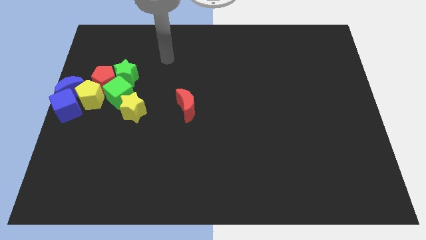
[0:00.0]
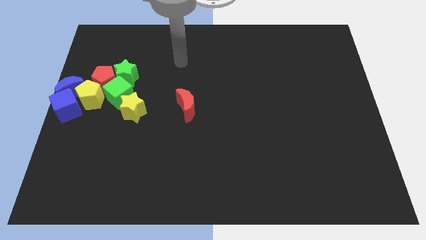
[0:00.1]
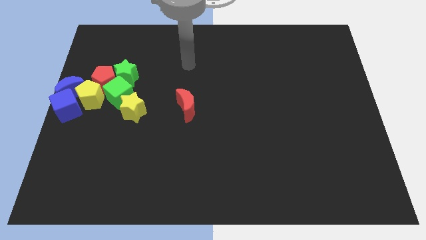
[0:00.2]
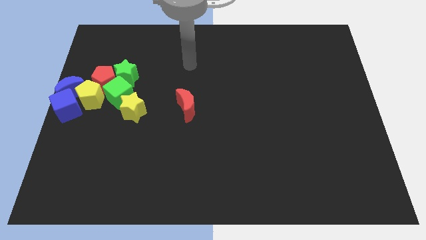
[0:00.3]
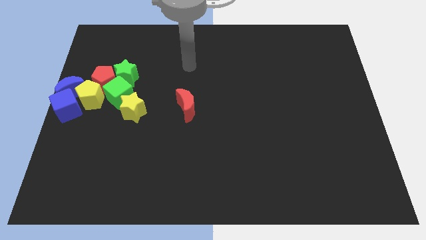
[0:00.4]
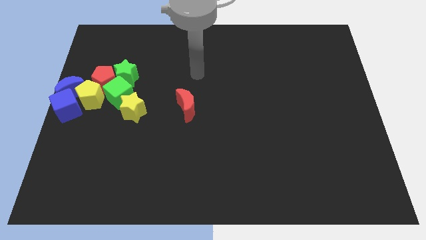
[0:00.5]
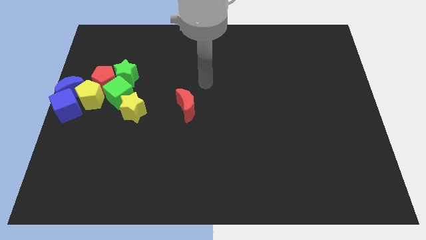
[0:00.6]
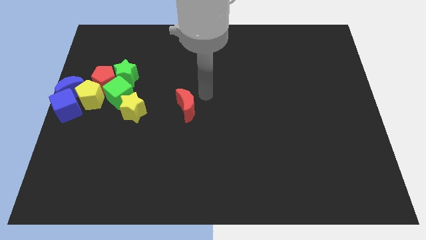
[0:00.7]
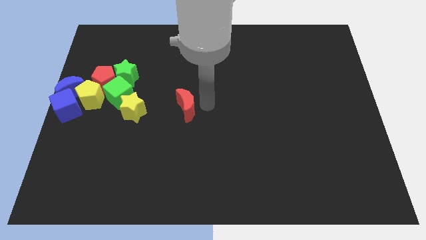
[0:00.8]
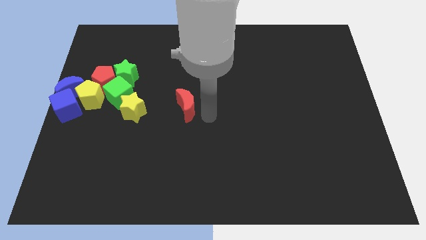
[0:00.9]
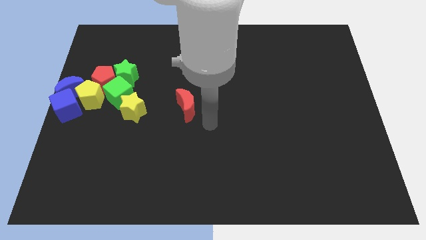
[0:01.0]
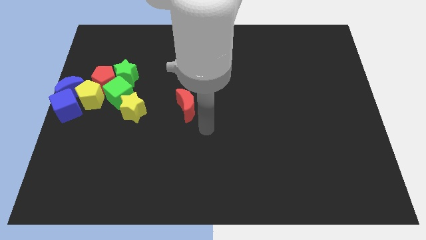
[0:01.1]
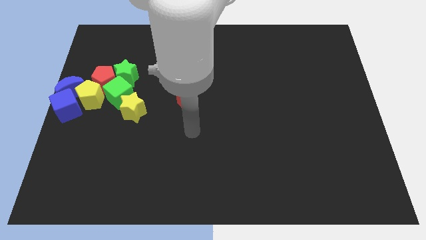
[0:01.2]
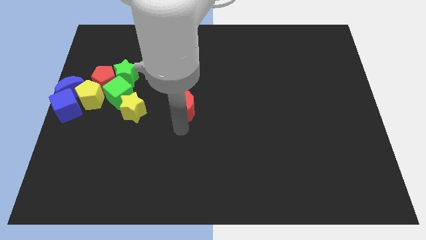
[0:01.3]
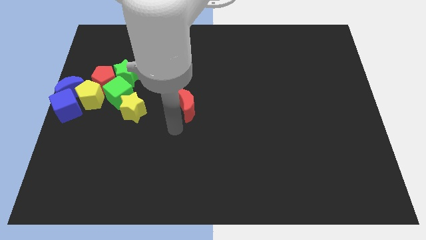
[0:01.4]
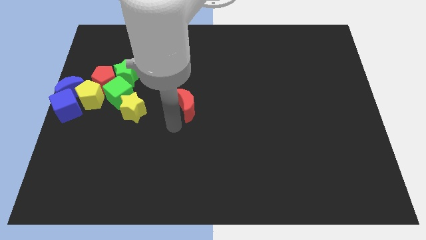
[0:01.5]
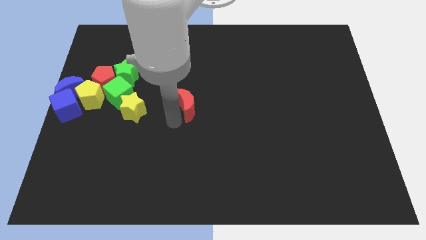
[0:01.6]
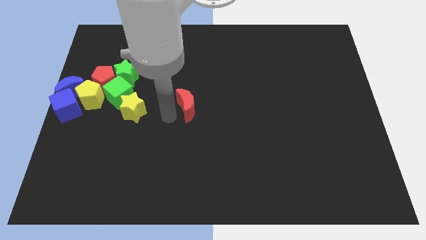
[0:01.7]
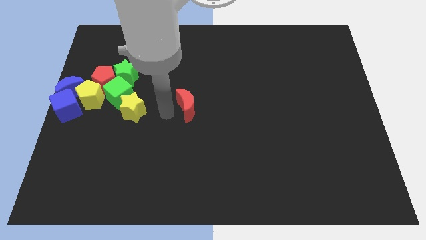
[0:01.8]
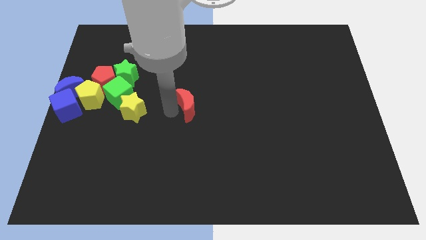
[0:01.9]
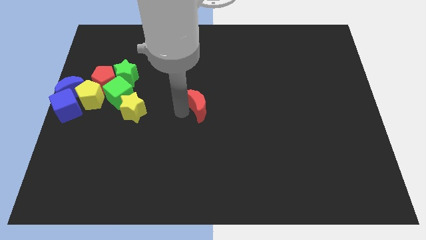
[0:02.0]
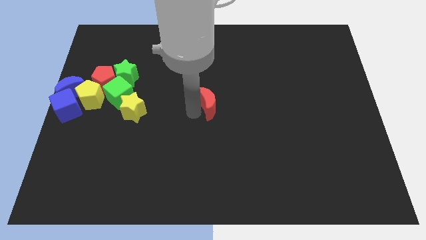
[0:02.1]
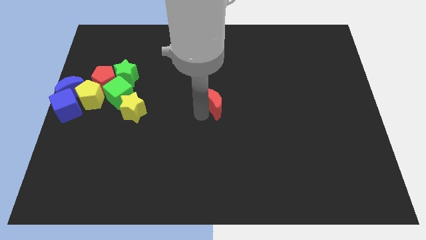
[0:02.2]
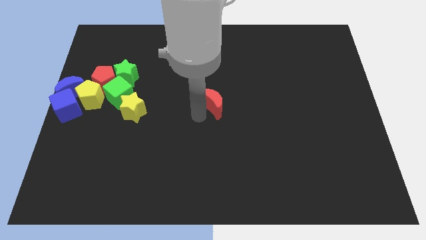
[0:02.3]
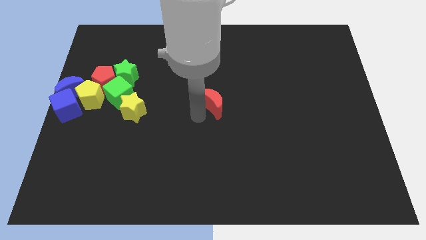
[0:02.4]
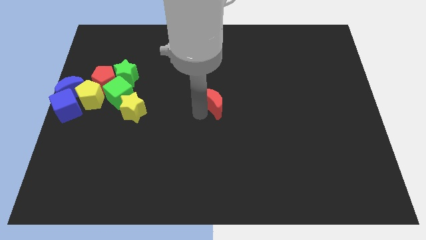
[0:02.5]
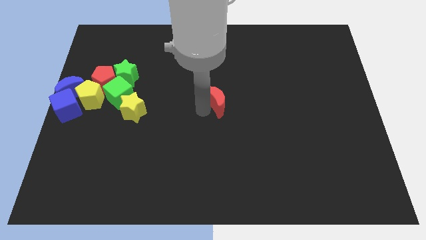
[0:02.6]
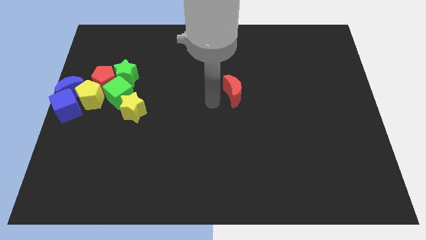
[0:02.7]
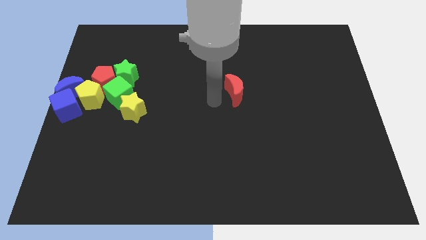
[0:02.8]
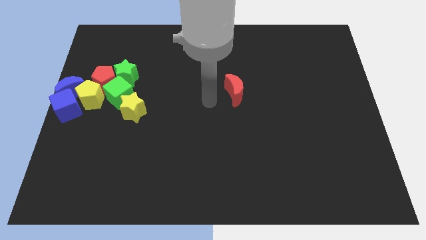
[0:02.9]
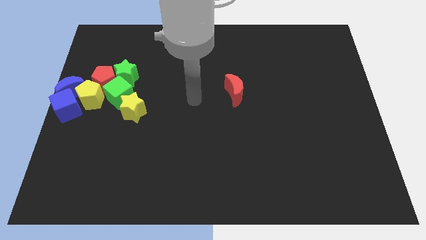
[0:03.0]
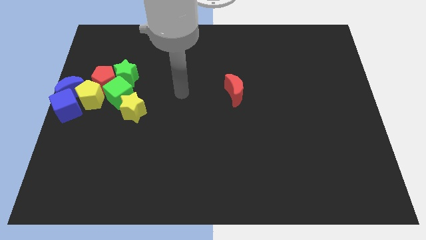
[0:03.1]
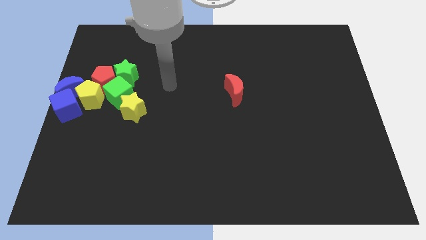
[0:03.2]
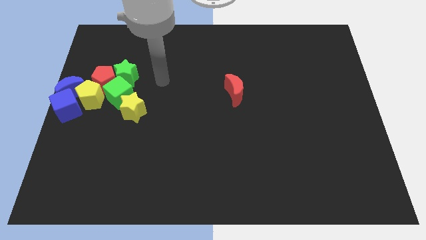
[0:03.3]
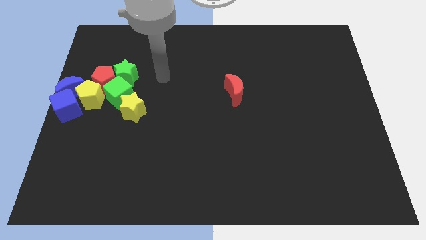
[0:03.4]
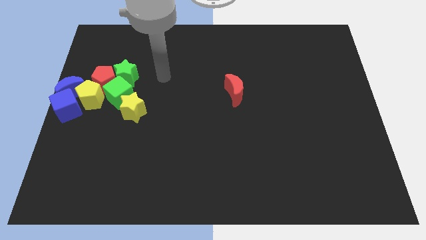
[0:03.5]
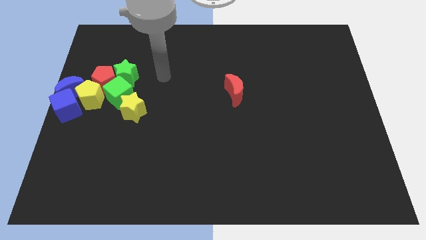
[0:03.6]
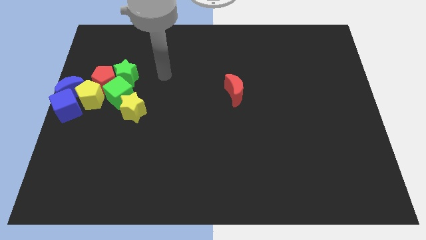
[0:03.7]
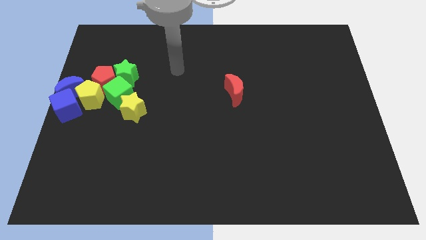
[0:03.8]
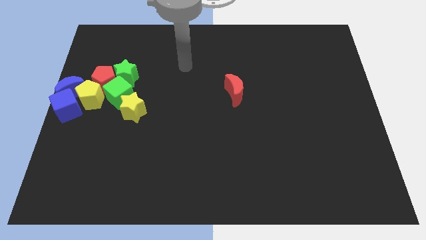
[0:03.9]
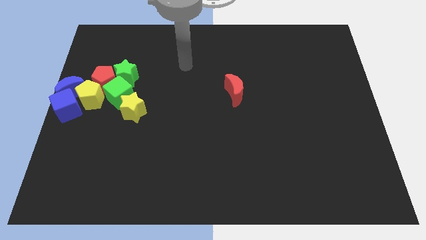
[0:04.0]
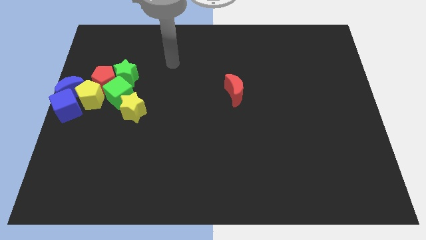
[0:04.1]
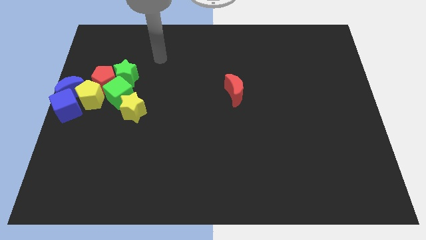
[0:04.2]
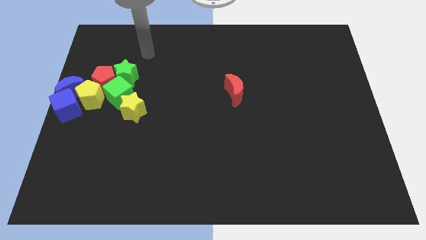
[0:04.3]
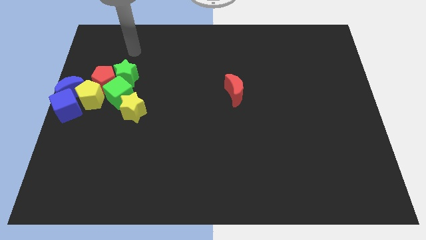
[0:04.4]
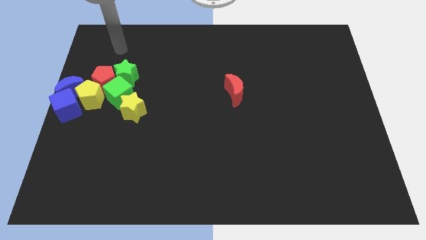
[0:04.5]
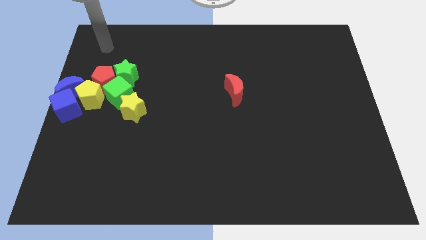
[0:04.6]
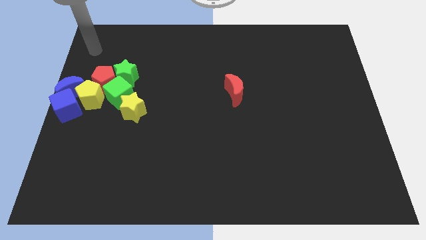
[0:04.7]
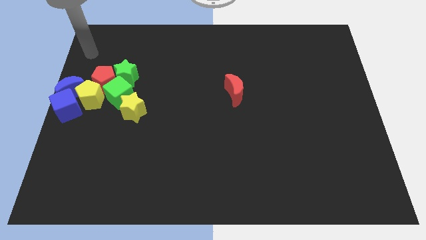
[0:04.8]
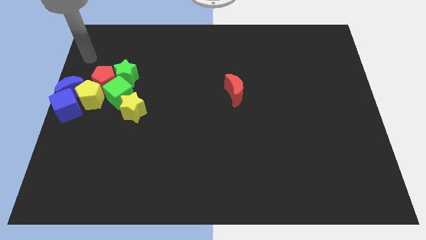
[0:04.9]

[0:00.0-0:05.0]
slide the red moon horizontally on the right side of the green cube

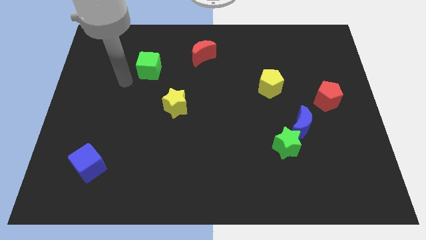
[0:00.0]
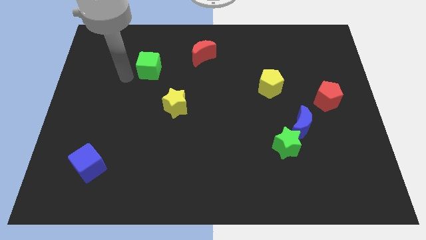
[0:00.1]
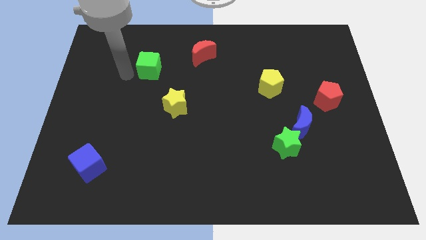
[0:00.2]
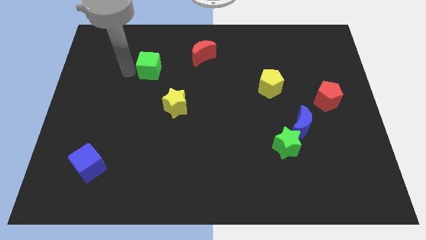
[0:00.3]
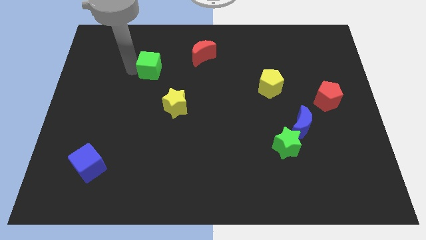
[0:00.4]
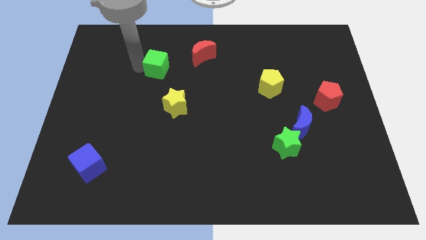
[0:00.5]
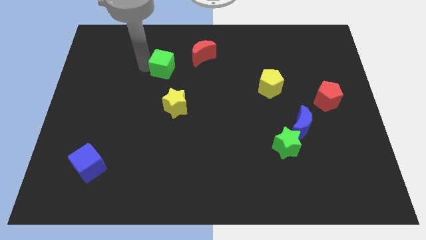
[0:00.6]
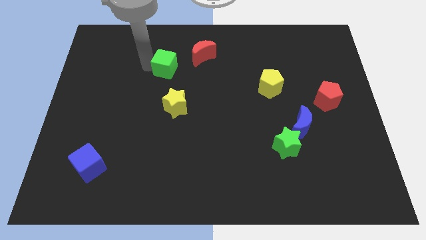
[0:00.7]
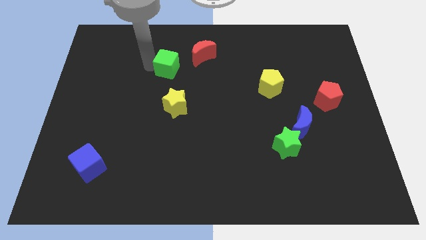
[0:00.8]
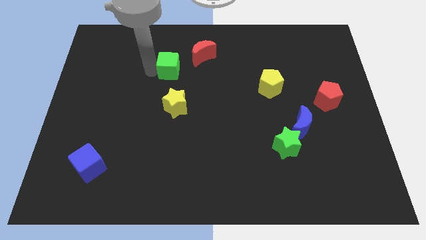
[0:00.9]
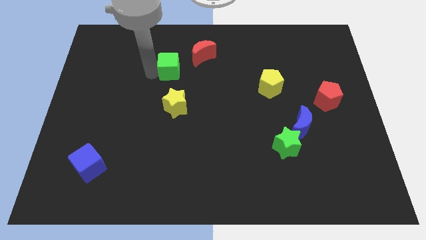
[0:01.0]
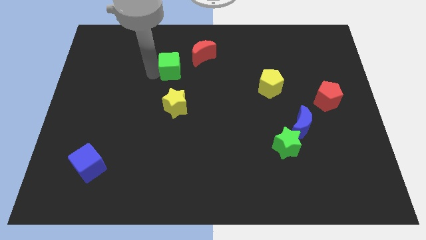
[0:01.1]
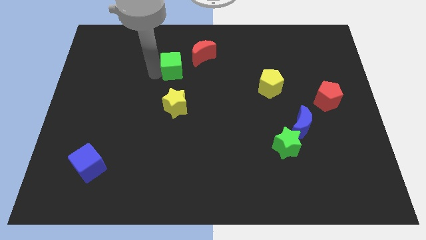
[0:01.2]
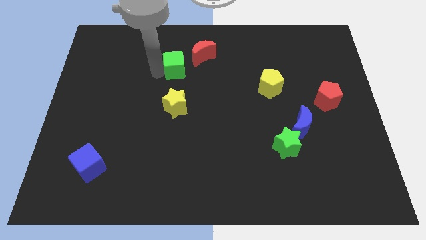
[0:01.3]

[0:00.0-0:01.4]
place green cube to the top of the yellow star

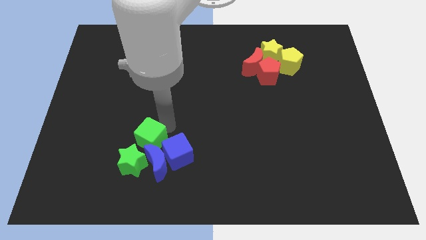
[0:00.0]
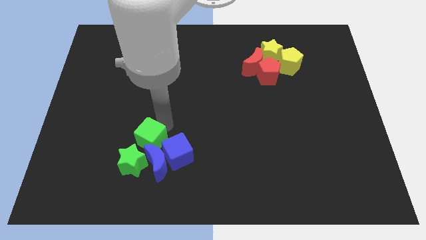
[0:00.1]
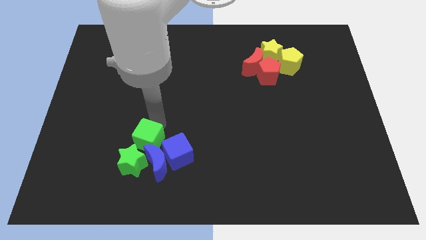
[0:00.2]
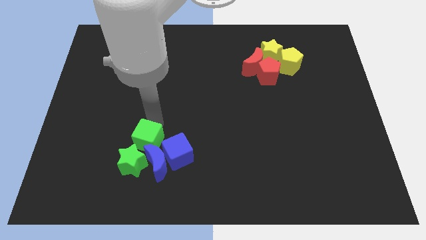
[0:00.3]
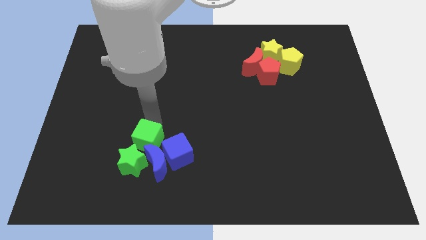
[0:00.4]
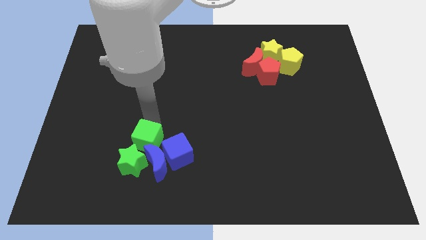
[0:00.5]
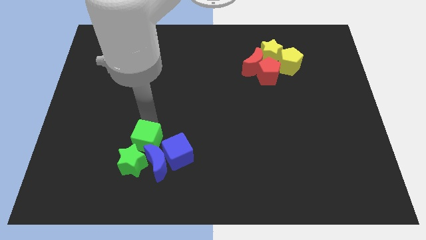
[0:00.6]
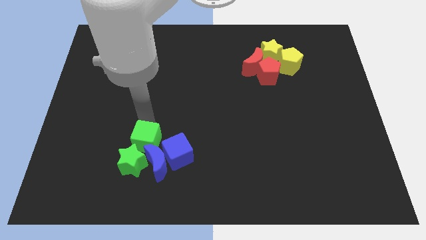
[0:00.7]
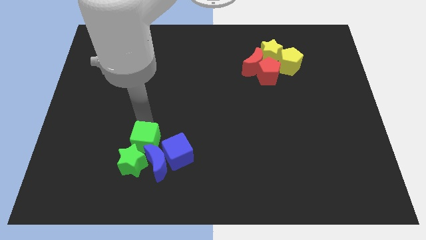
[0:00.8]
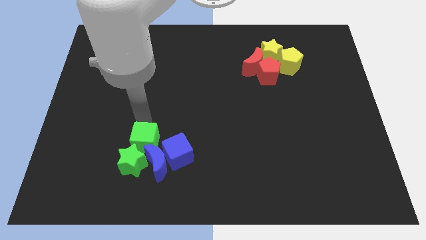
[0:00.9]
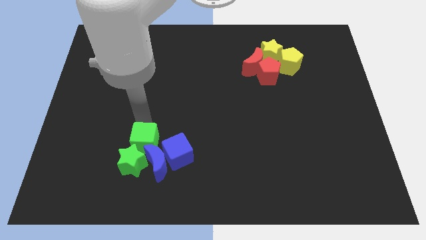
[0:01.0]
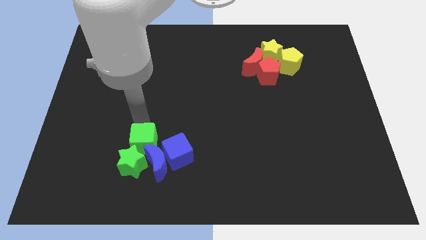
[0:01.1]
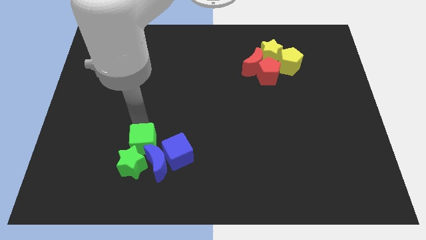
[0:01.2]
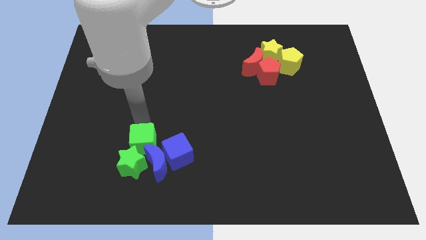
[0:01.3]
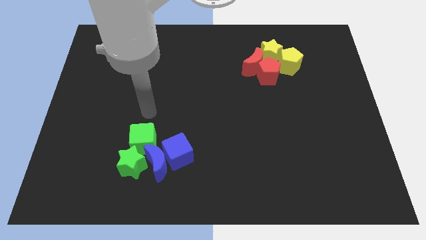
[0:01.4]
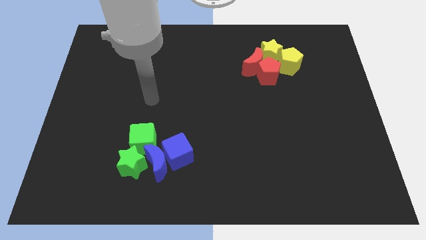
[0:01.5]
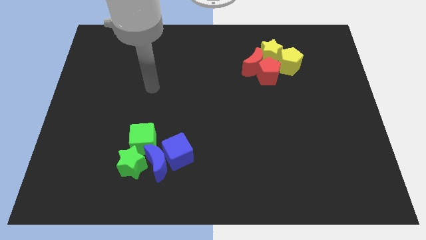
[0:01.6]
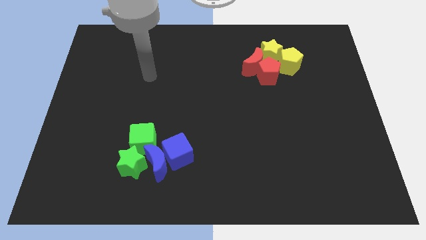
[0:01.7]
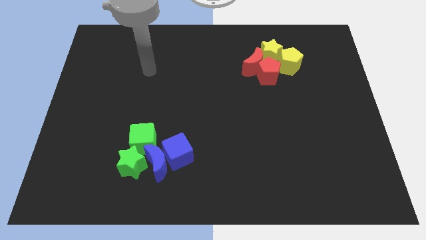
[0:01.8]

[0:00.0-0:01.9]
adjust the green cube to the top of the green star

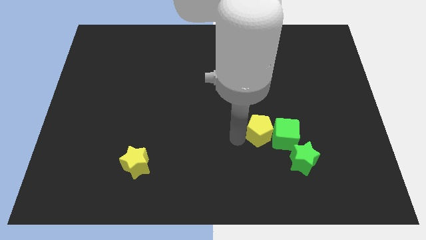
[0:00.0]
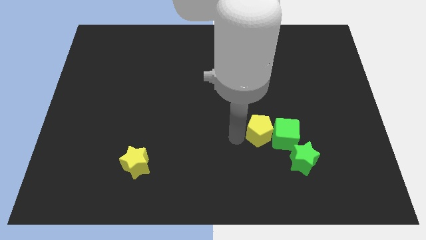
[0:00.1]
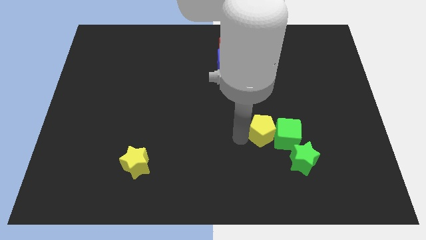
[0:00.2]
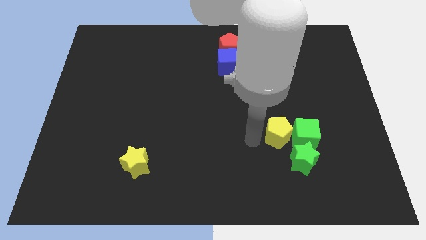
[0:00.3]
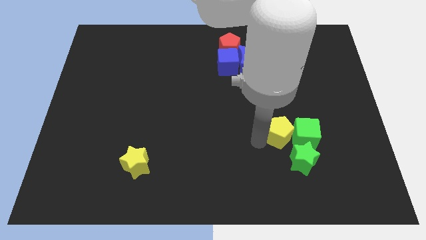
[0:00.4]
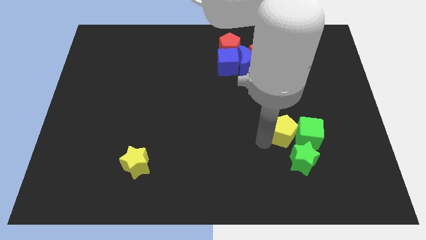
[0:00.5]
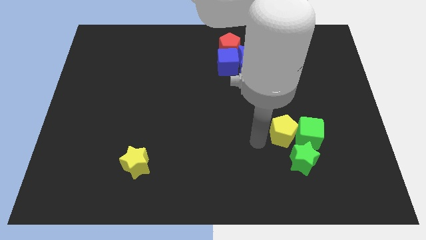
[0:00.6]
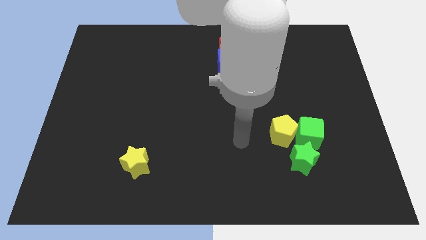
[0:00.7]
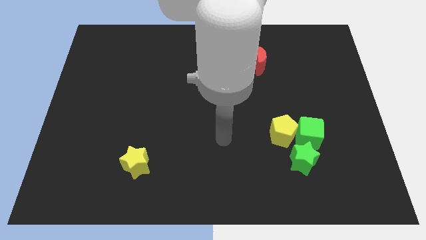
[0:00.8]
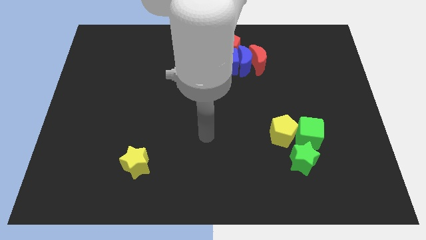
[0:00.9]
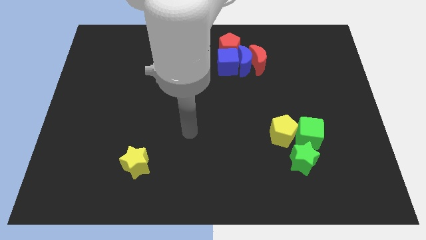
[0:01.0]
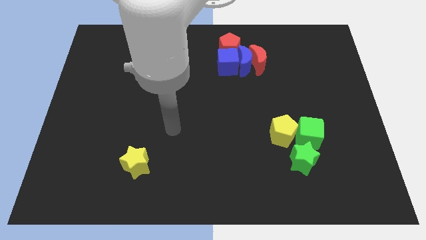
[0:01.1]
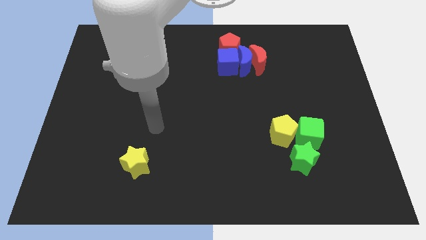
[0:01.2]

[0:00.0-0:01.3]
push the yellow pentagon into the green cube
